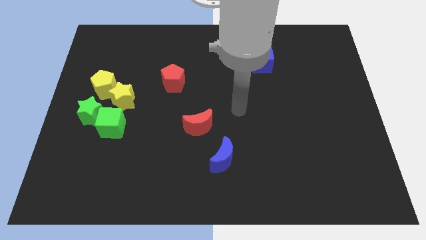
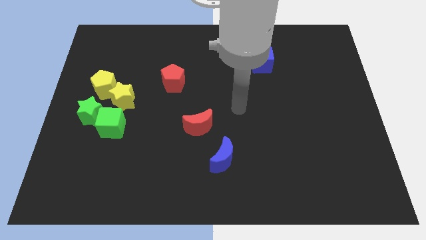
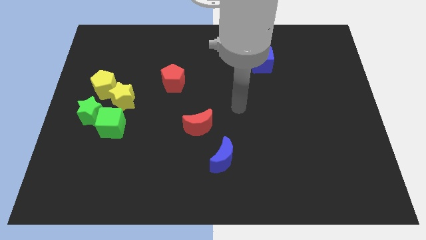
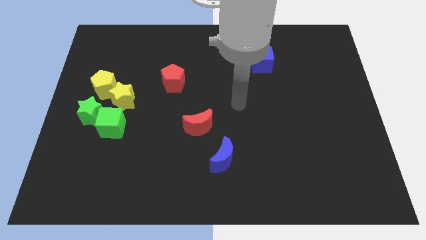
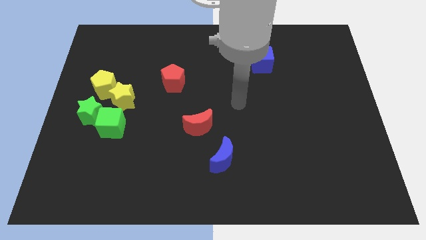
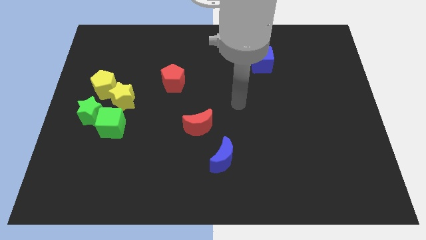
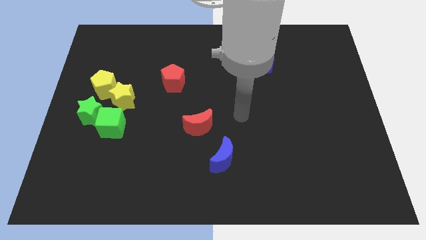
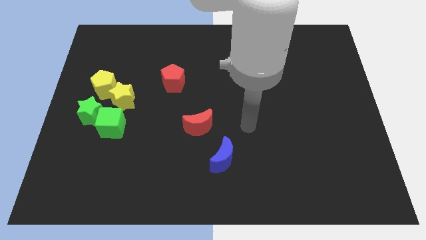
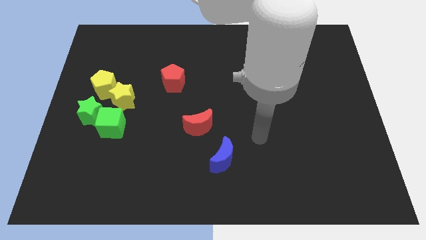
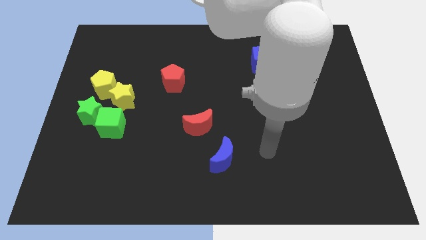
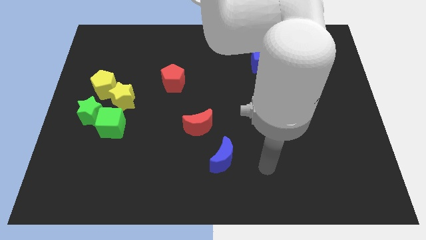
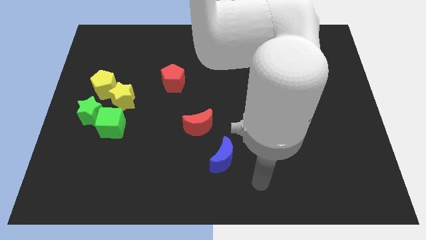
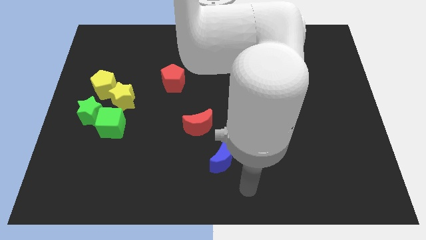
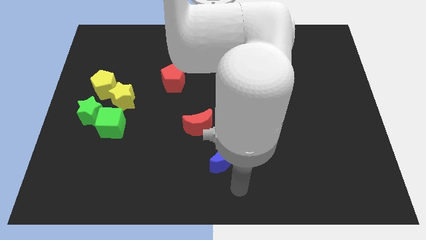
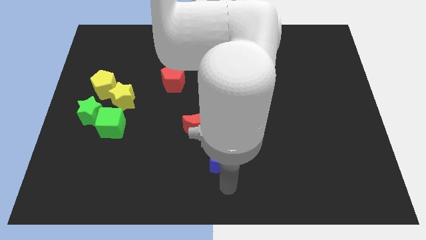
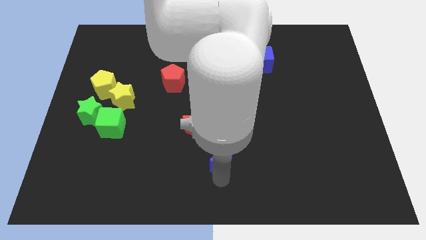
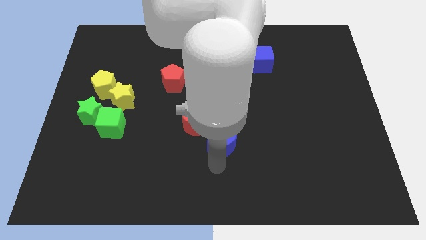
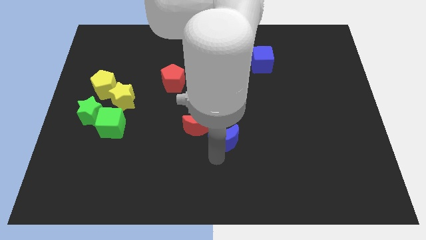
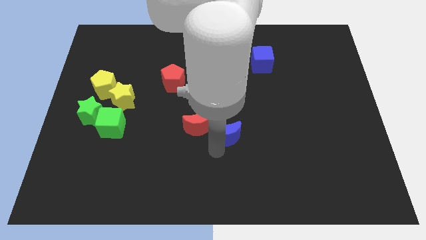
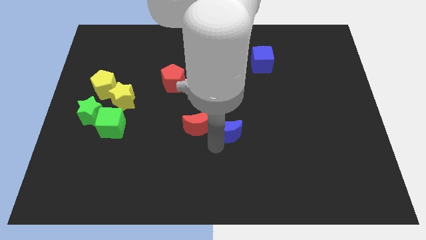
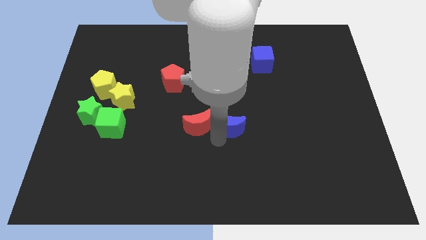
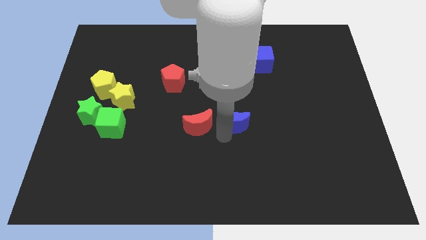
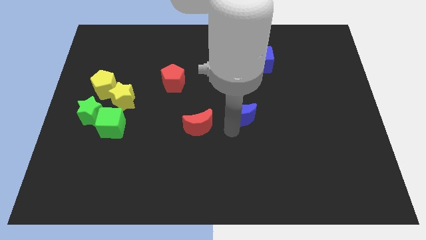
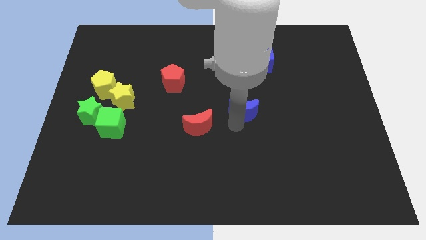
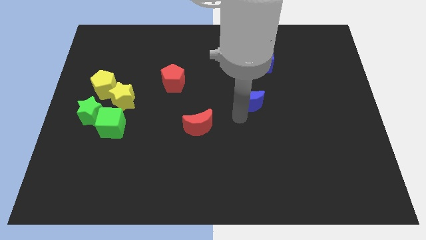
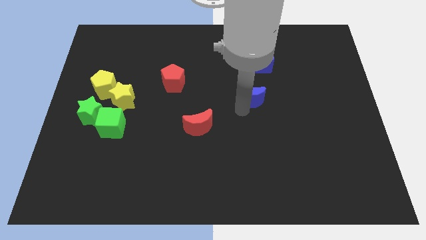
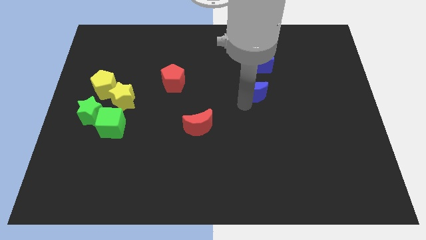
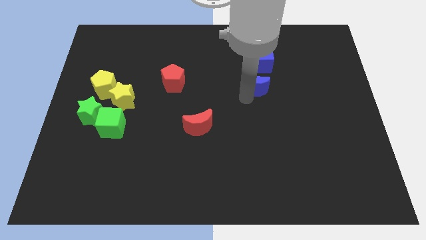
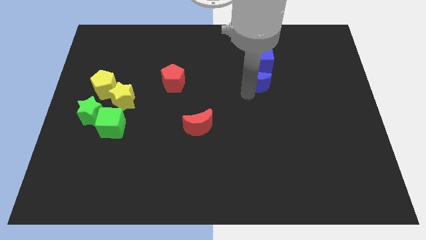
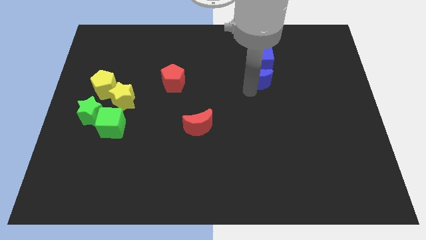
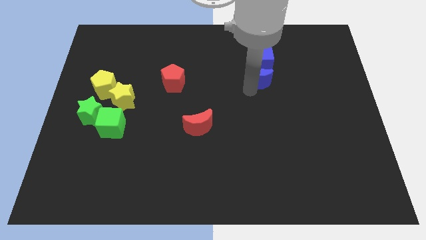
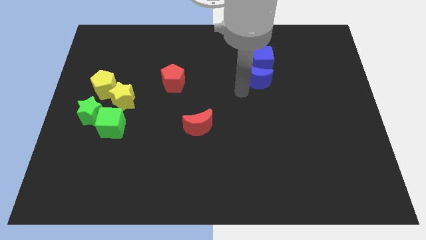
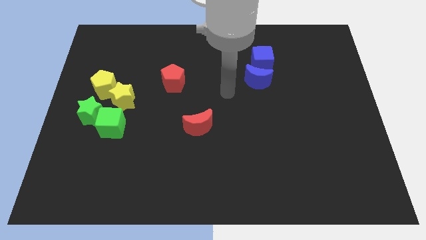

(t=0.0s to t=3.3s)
place the blue crescent vertically below the blue cube

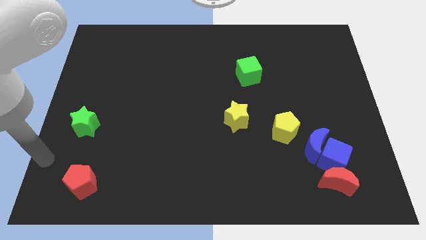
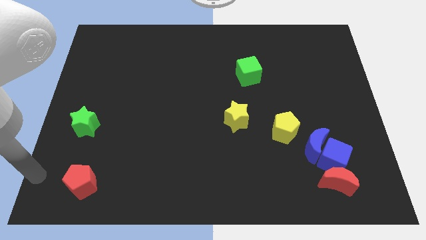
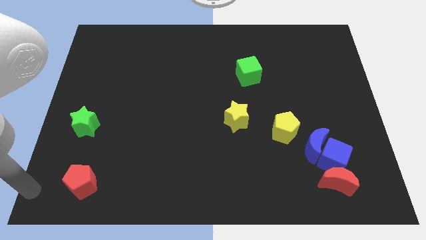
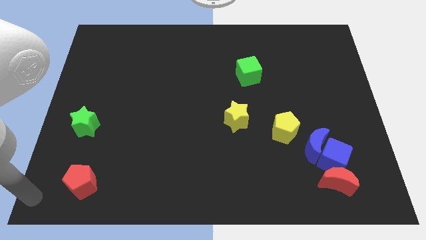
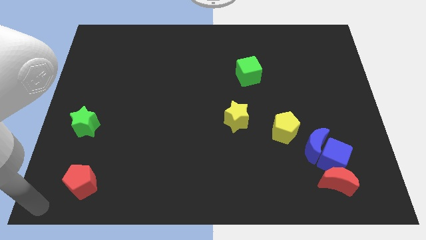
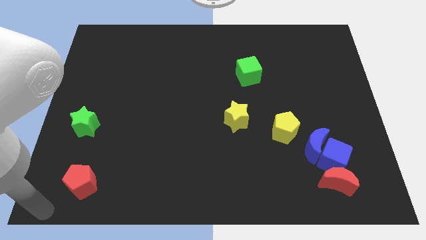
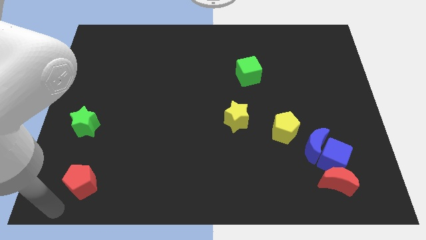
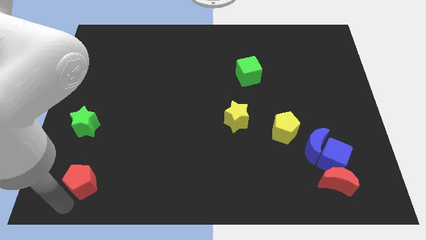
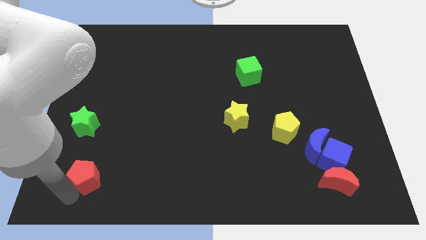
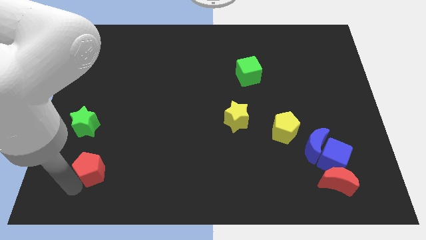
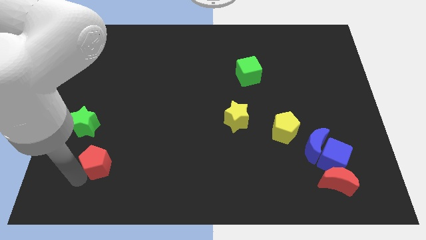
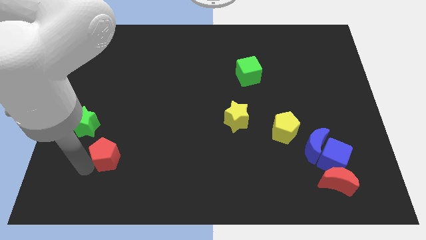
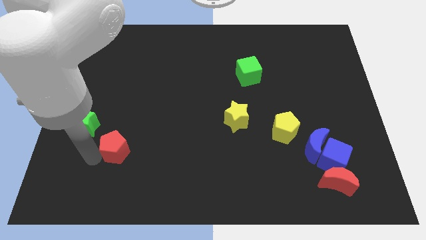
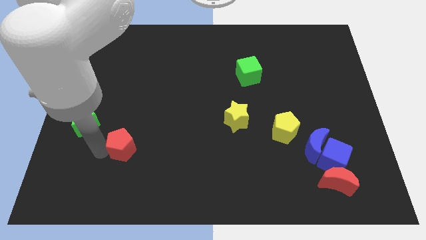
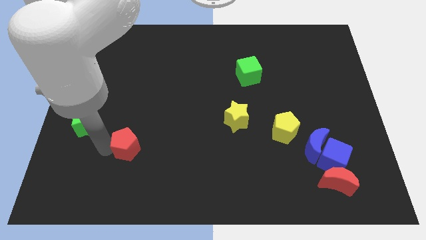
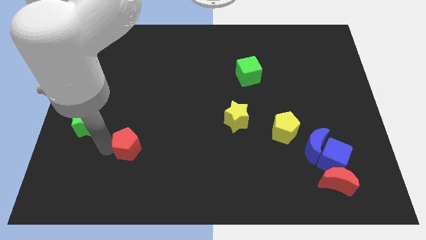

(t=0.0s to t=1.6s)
move the red pentagon diagonally on the bottom right side of the green star

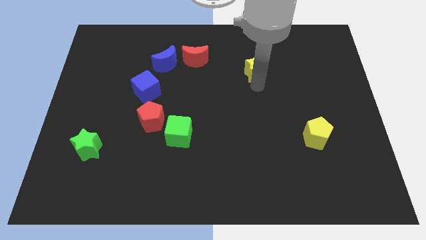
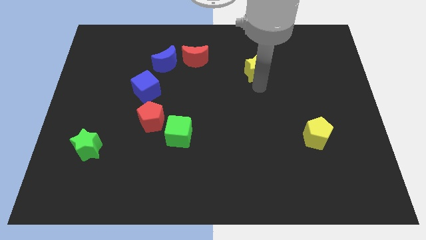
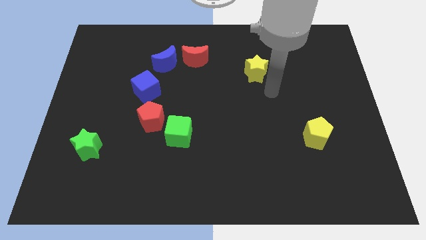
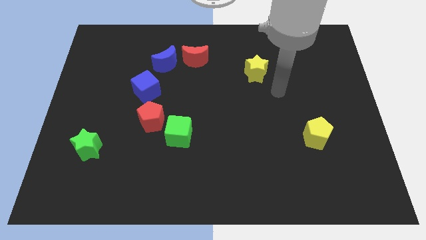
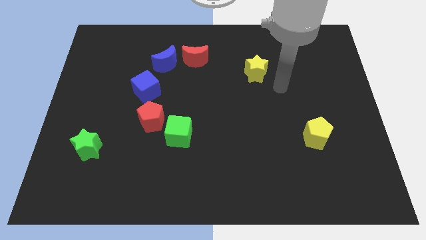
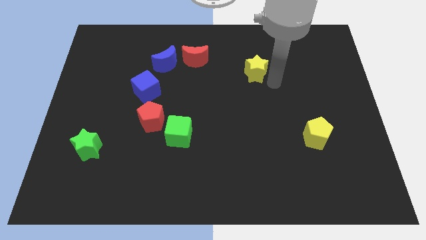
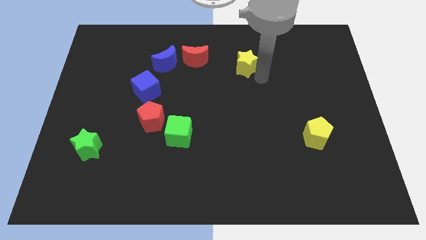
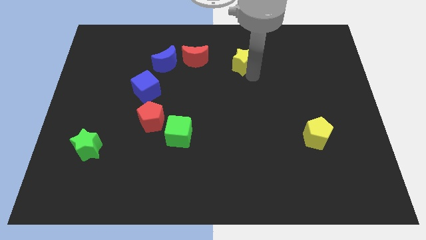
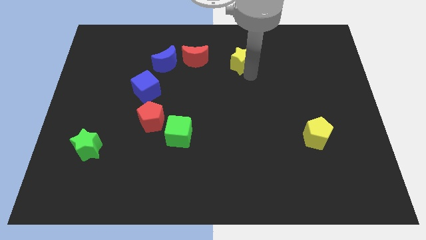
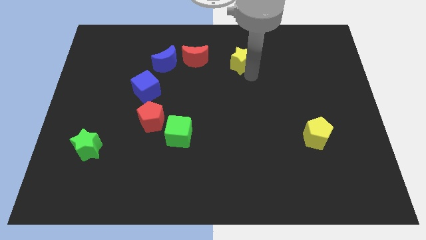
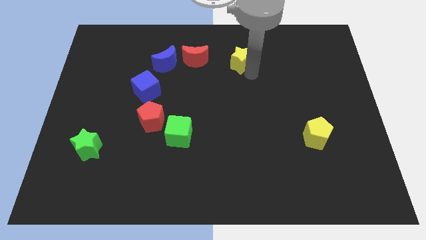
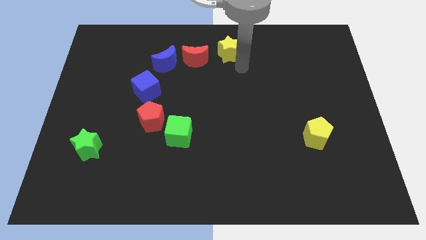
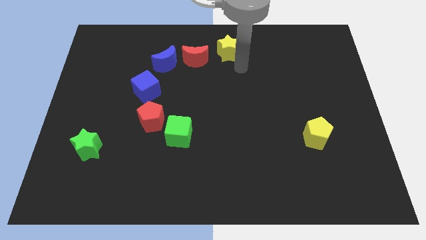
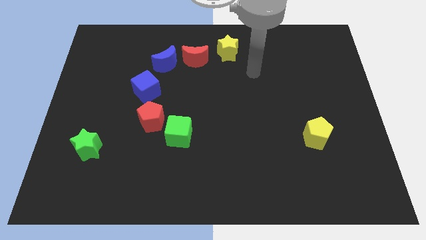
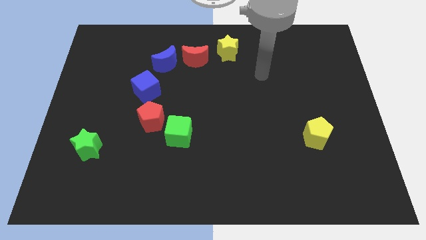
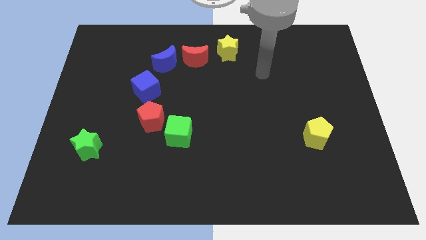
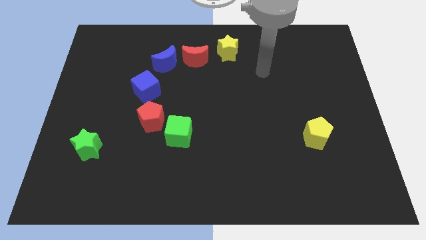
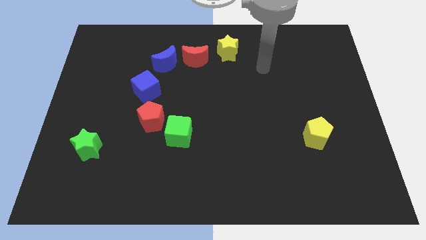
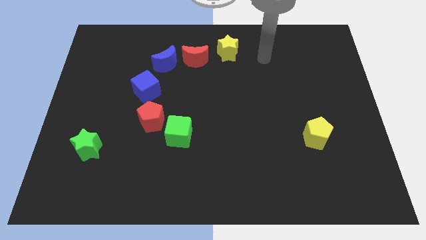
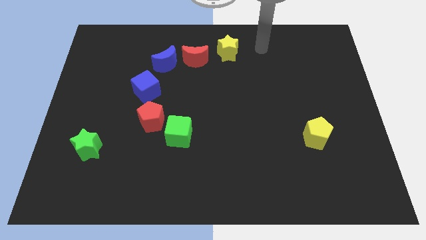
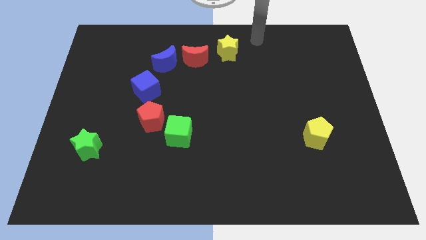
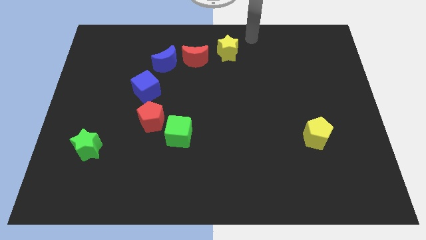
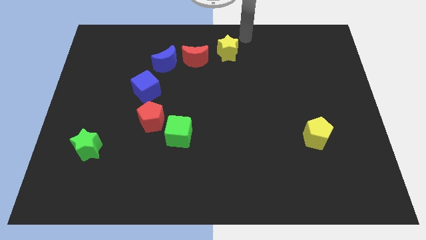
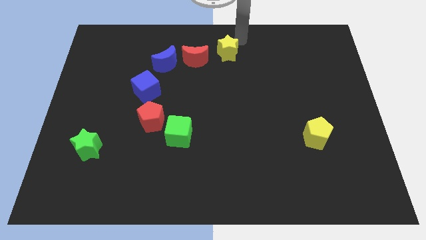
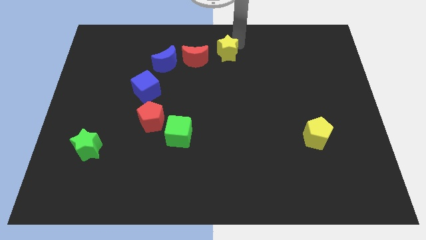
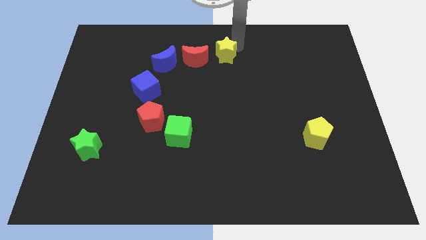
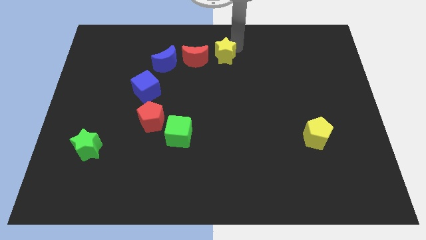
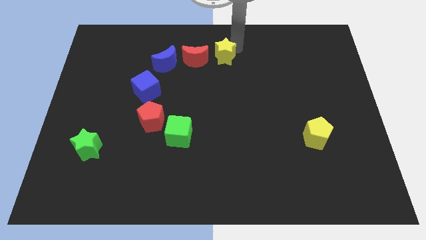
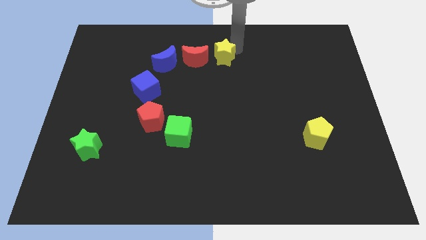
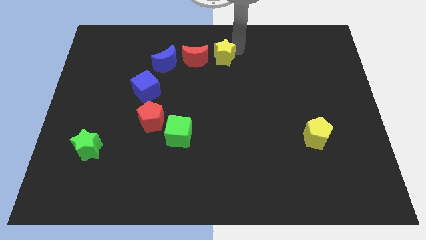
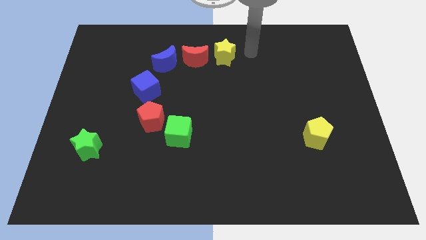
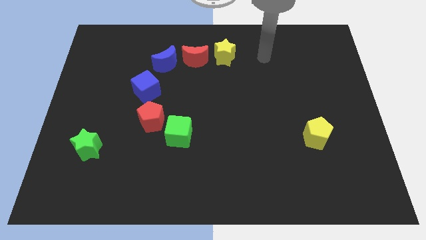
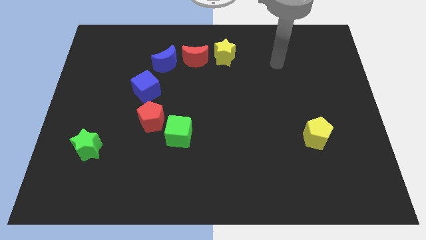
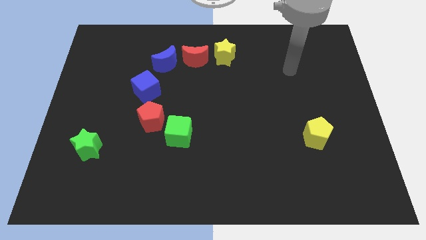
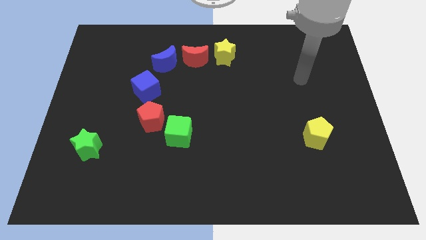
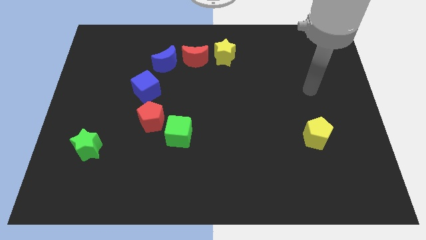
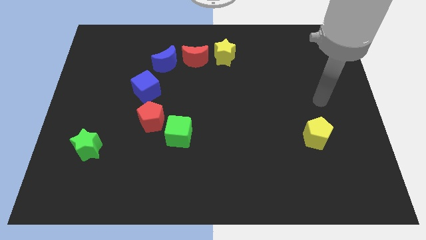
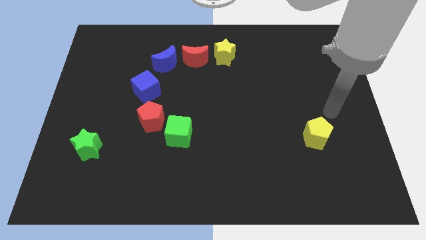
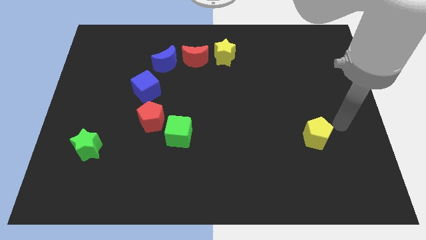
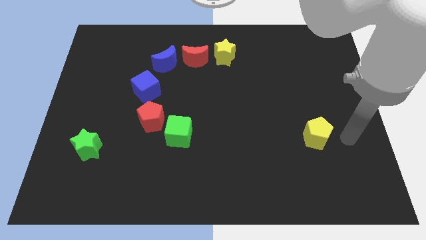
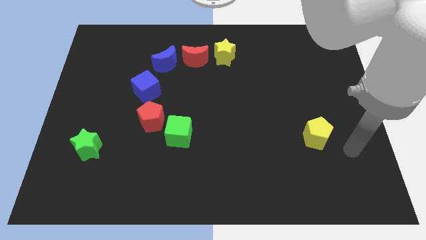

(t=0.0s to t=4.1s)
place the yellow star to the right side of the red crescent
